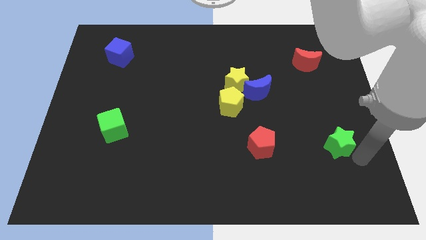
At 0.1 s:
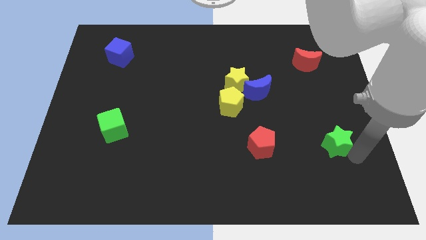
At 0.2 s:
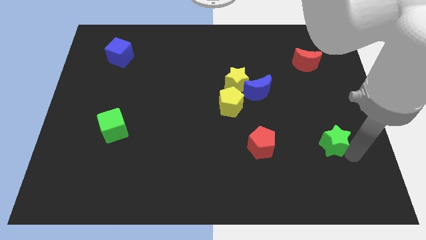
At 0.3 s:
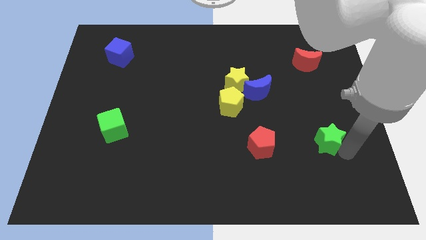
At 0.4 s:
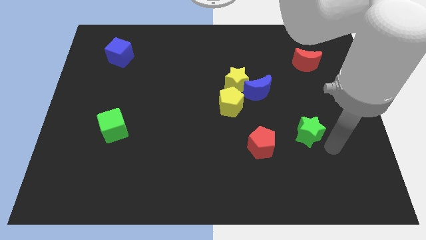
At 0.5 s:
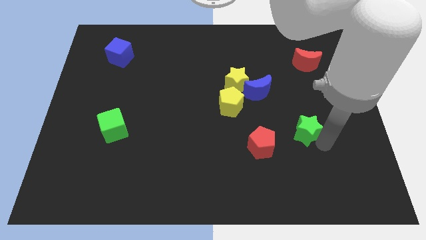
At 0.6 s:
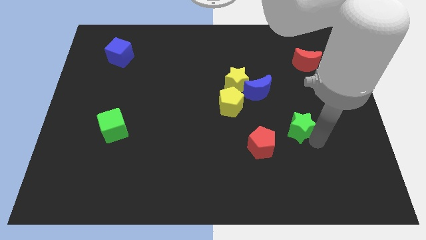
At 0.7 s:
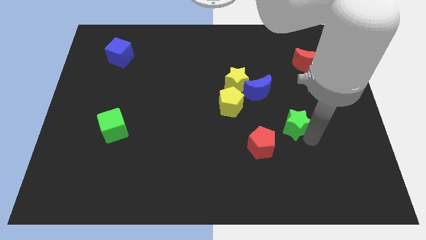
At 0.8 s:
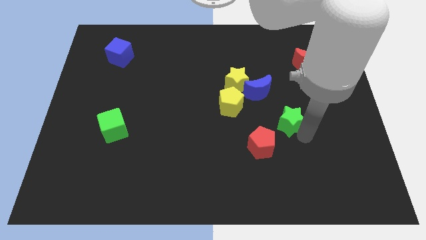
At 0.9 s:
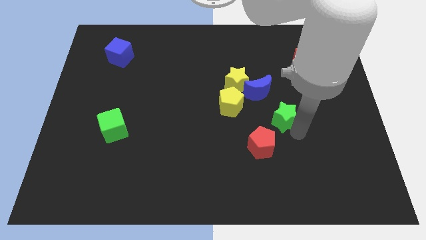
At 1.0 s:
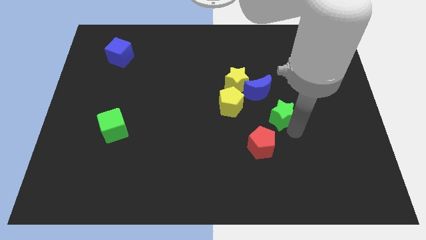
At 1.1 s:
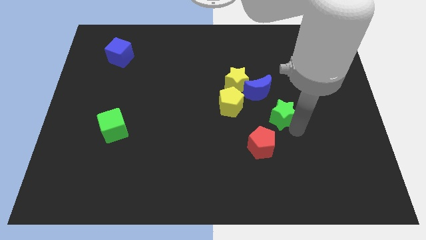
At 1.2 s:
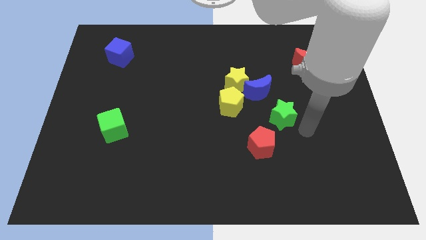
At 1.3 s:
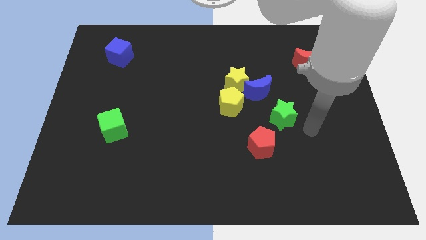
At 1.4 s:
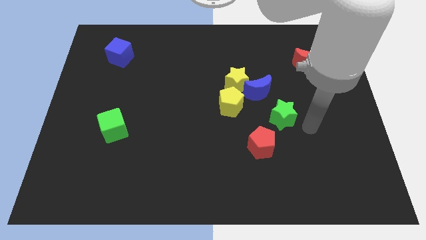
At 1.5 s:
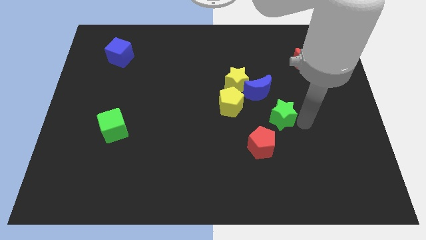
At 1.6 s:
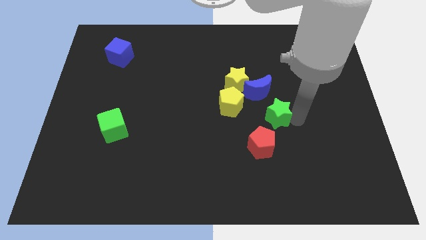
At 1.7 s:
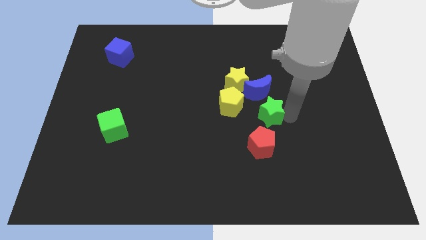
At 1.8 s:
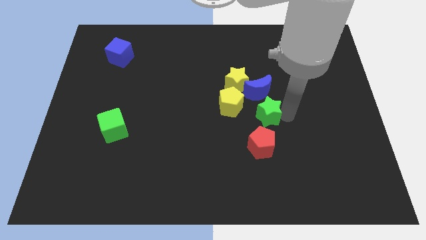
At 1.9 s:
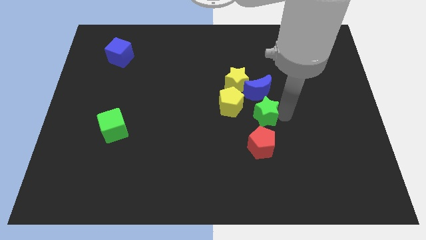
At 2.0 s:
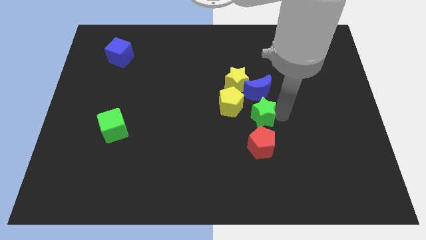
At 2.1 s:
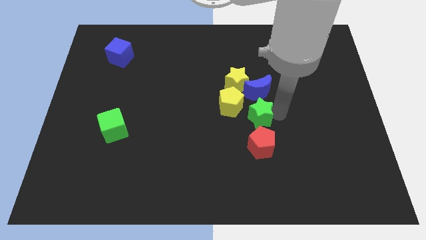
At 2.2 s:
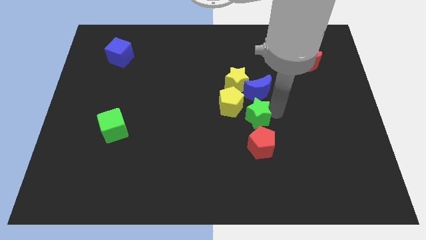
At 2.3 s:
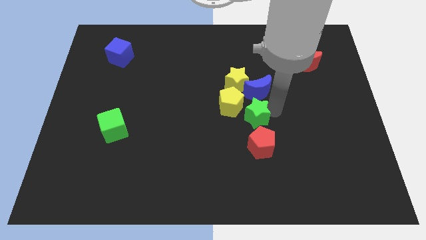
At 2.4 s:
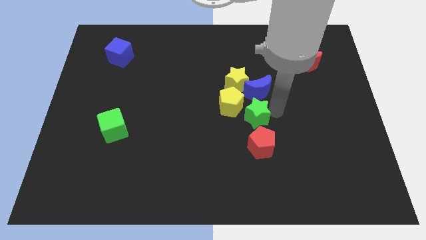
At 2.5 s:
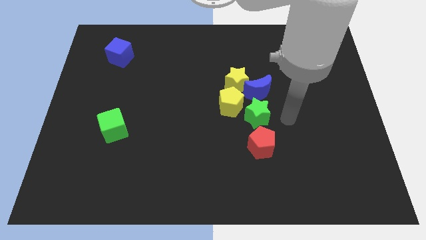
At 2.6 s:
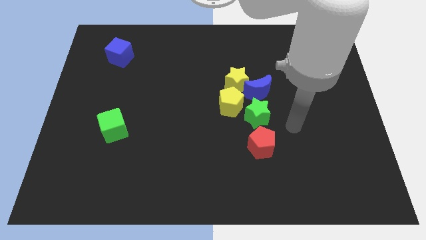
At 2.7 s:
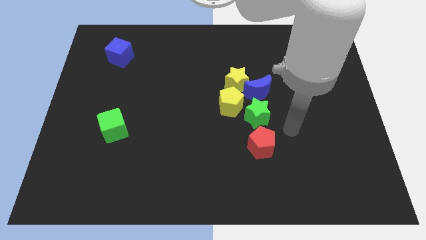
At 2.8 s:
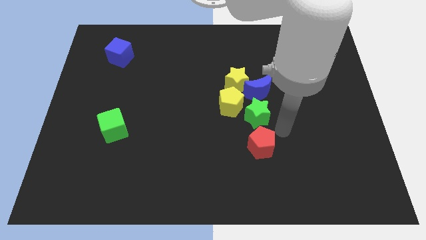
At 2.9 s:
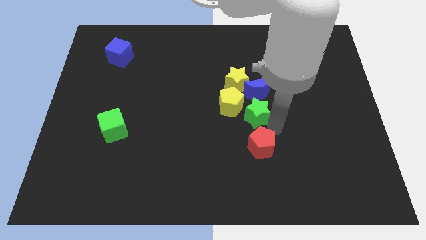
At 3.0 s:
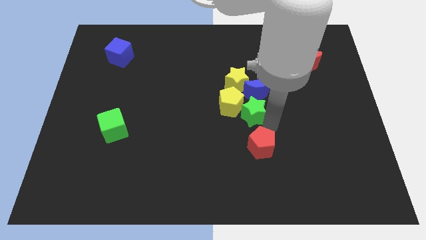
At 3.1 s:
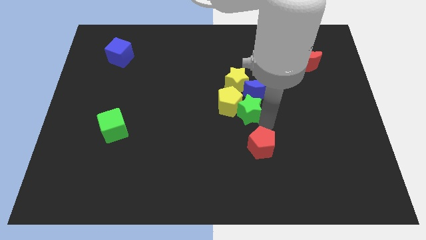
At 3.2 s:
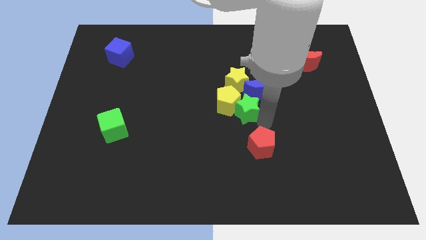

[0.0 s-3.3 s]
push the green star into yellow pentagon

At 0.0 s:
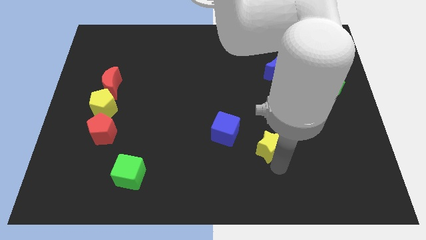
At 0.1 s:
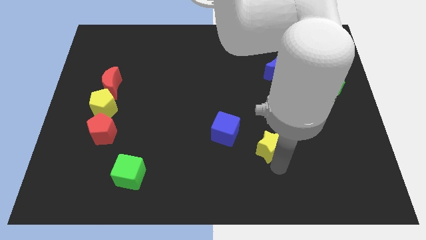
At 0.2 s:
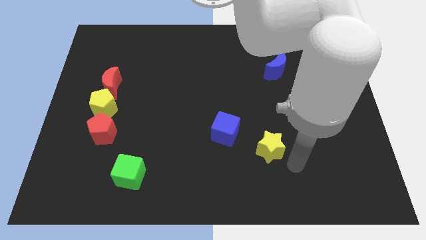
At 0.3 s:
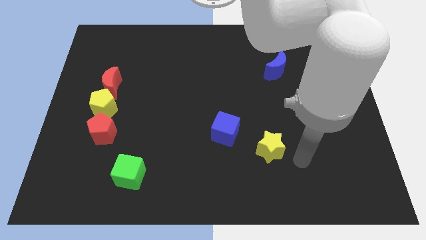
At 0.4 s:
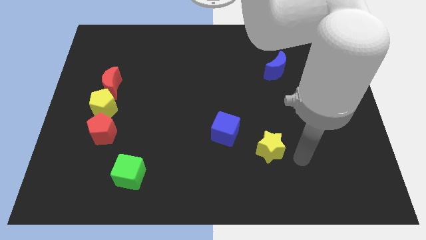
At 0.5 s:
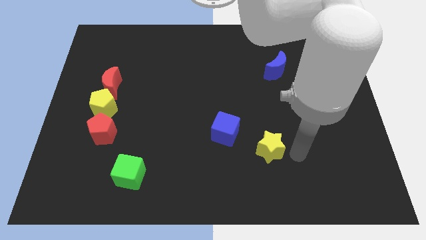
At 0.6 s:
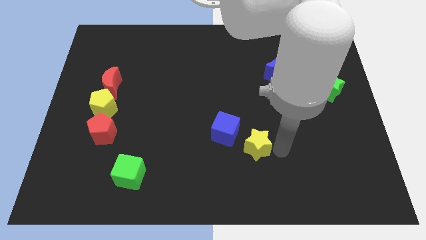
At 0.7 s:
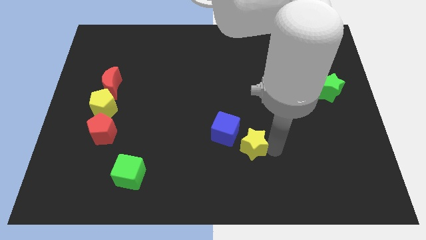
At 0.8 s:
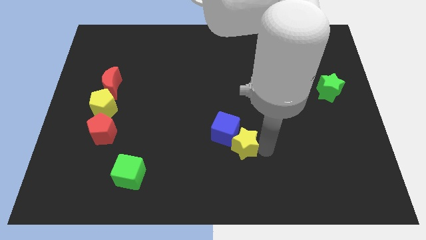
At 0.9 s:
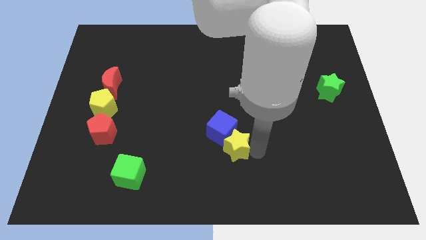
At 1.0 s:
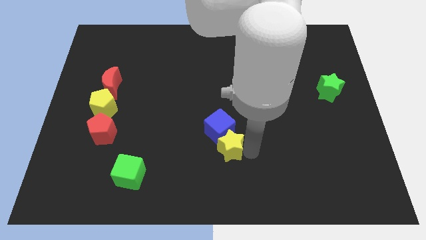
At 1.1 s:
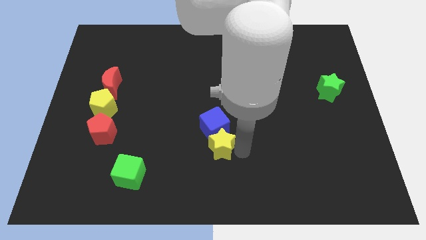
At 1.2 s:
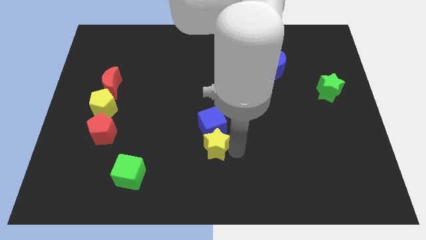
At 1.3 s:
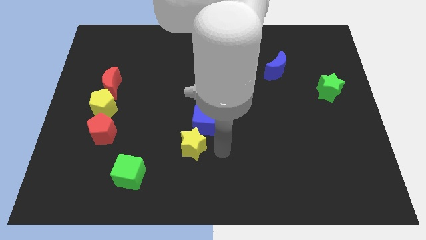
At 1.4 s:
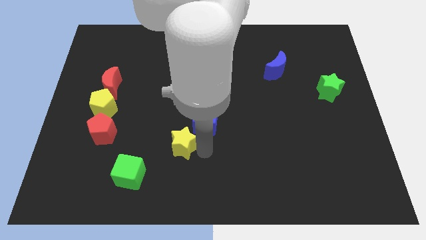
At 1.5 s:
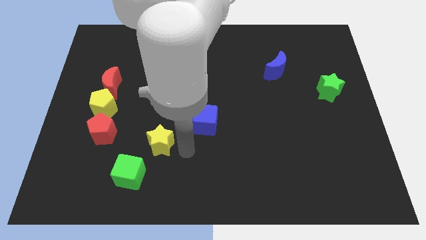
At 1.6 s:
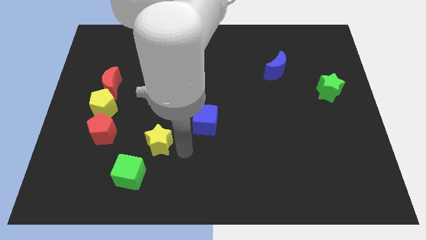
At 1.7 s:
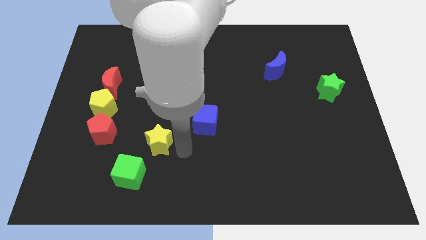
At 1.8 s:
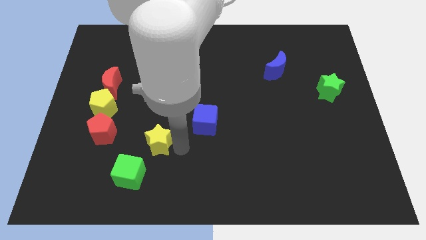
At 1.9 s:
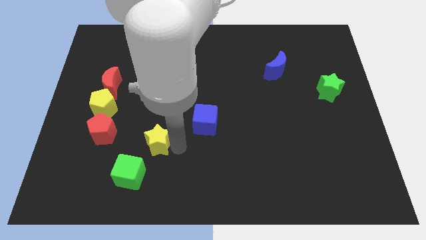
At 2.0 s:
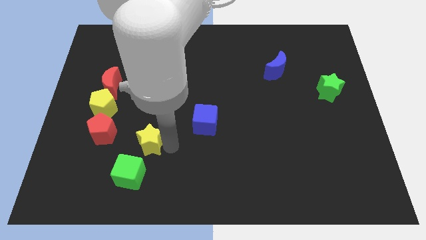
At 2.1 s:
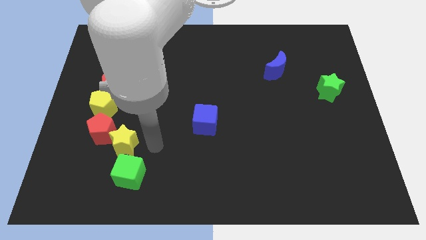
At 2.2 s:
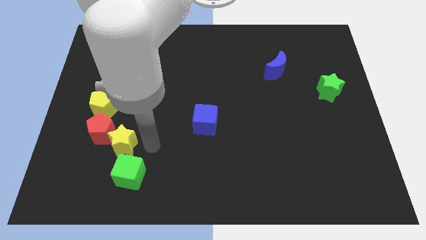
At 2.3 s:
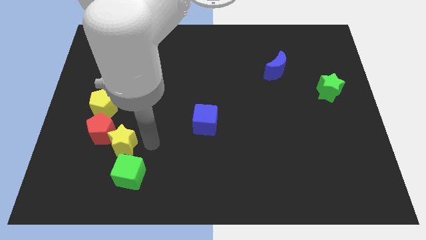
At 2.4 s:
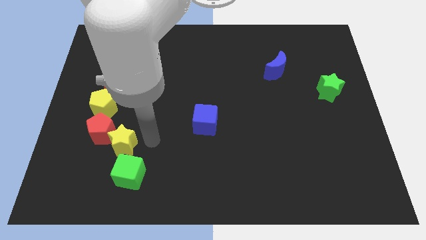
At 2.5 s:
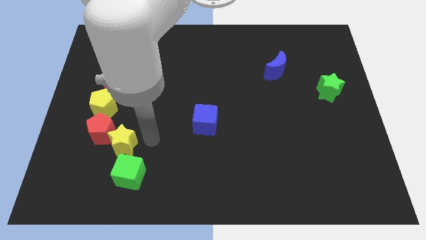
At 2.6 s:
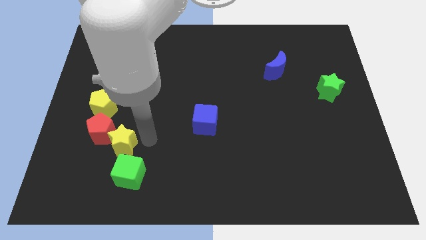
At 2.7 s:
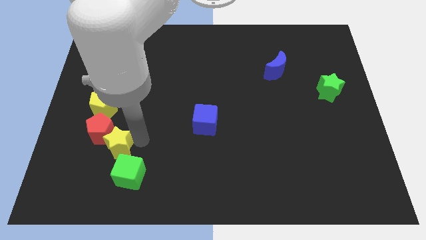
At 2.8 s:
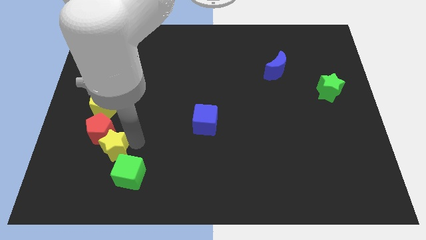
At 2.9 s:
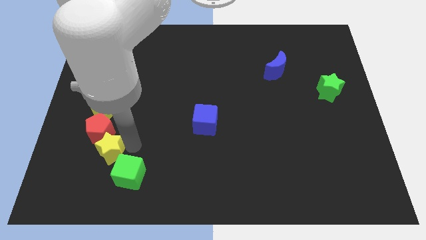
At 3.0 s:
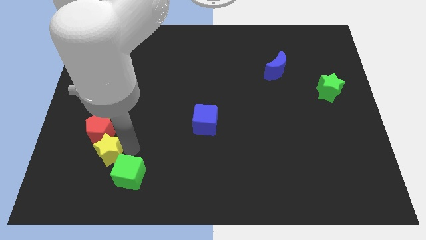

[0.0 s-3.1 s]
place the yellow star in between the green cube and red pentagon

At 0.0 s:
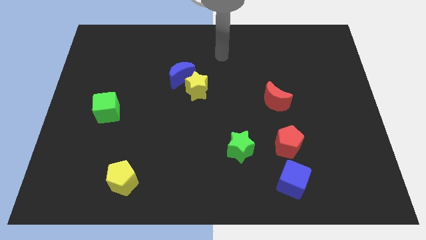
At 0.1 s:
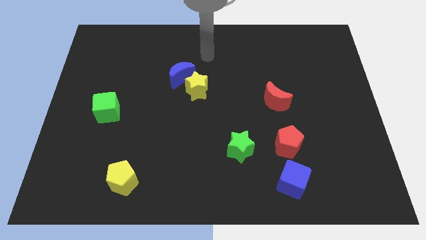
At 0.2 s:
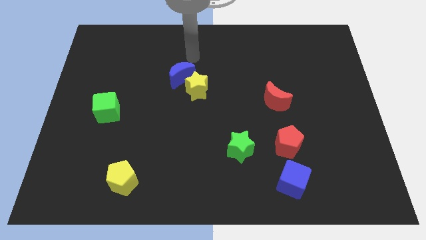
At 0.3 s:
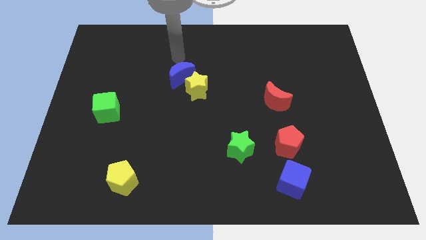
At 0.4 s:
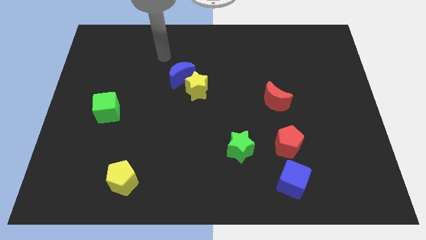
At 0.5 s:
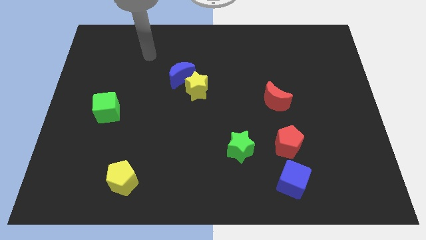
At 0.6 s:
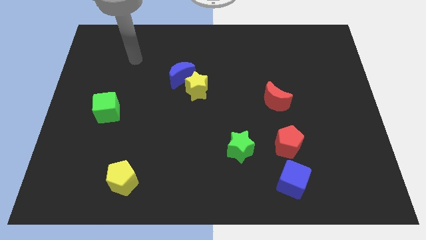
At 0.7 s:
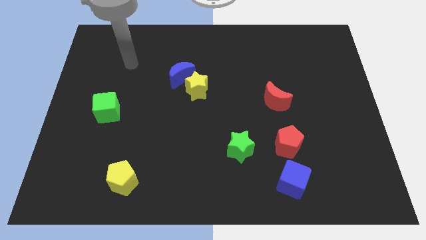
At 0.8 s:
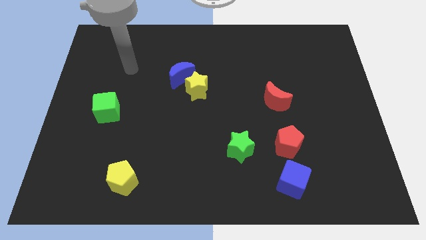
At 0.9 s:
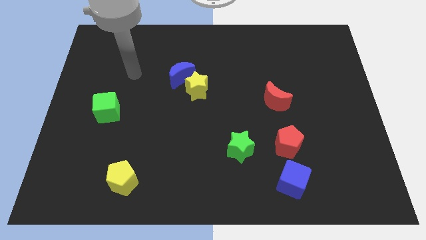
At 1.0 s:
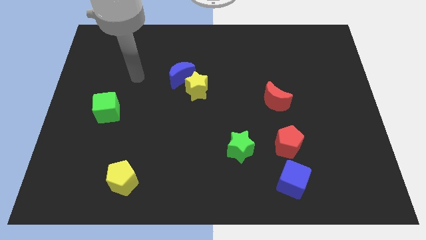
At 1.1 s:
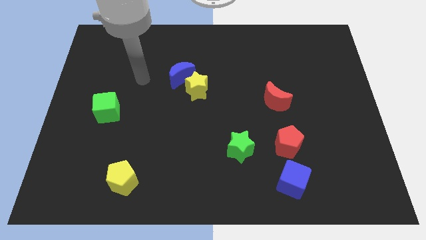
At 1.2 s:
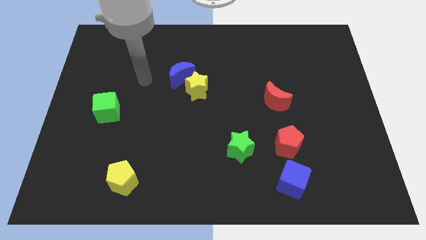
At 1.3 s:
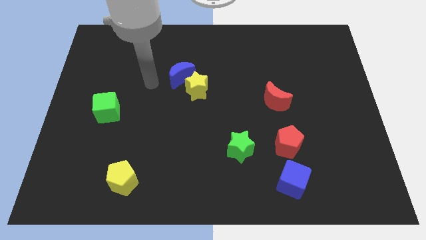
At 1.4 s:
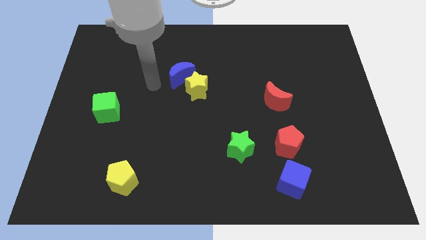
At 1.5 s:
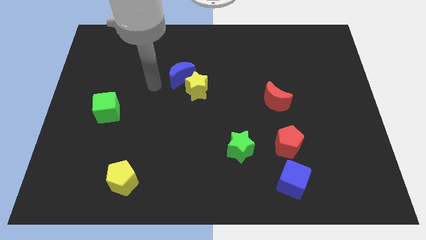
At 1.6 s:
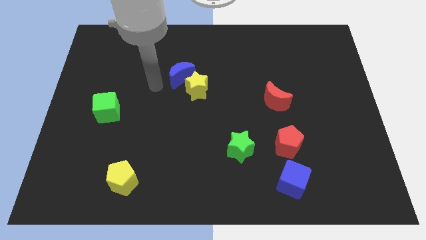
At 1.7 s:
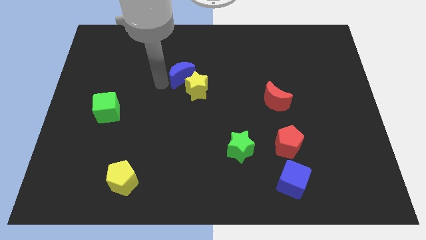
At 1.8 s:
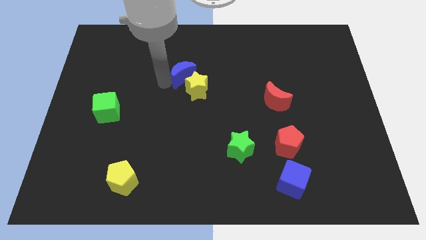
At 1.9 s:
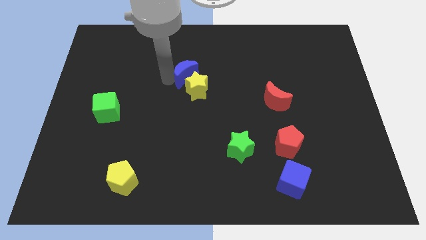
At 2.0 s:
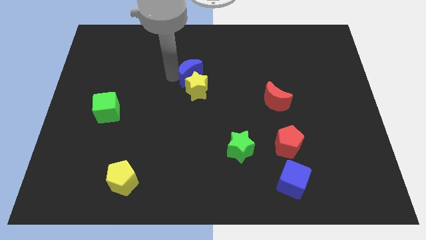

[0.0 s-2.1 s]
slide the blue moon to the top side of yellow star

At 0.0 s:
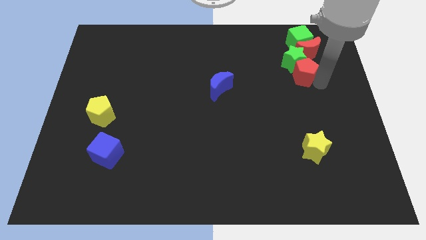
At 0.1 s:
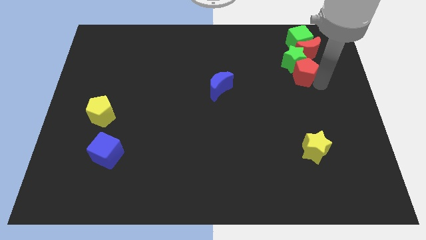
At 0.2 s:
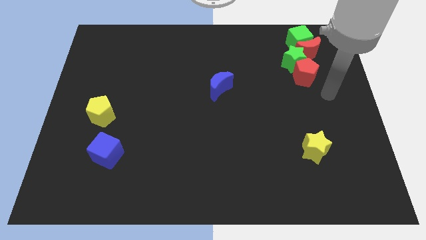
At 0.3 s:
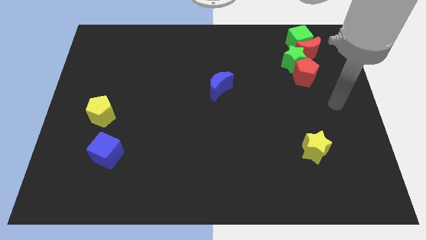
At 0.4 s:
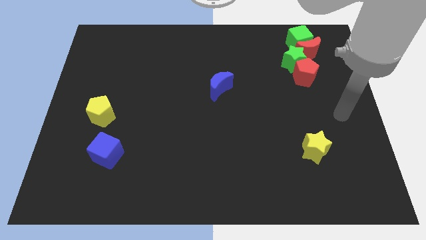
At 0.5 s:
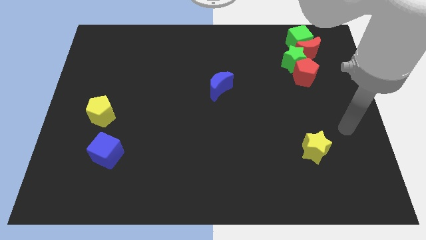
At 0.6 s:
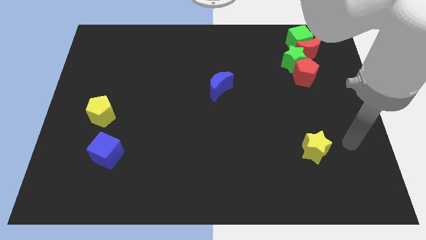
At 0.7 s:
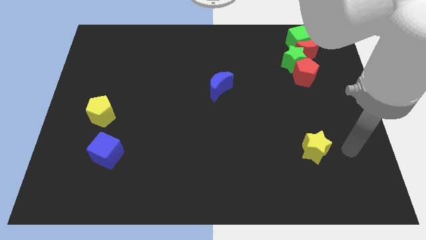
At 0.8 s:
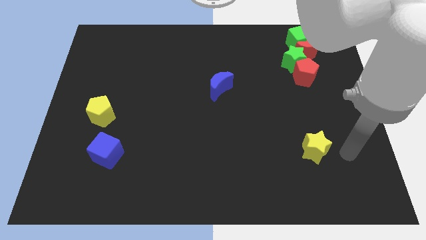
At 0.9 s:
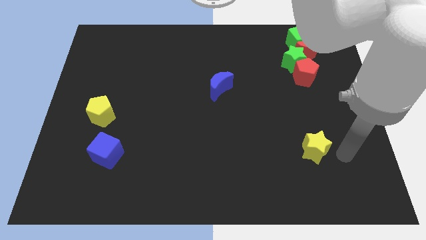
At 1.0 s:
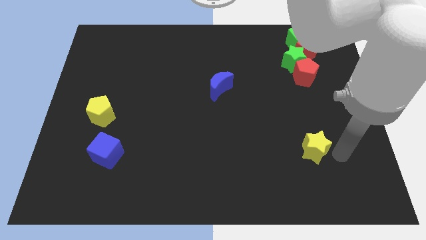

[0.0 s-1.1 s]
place your arm to the right of the yellow star
